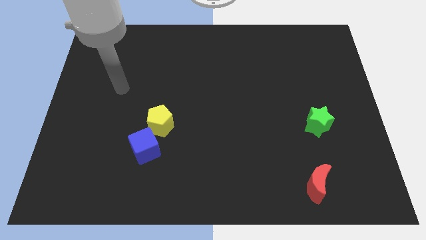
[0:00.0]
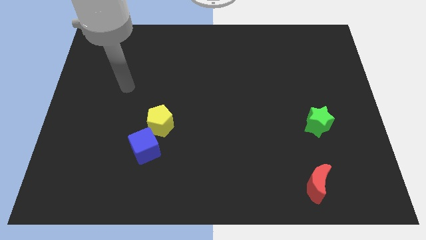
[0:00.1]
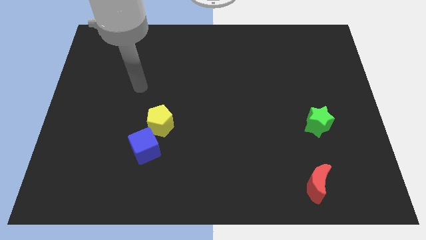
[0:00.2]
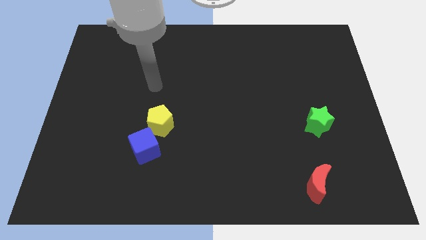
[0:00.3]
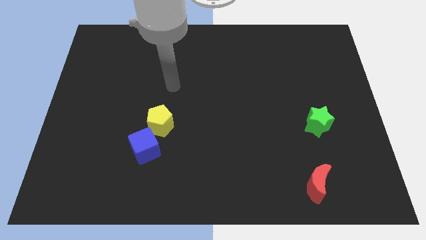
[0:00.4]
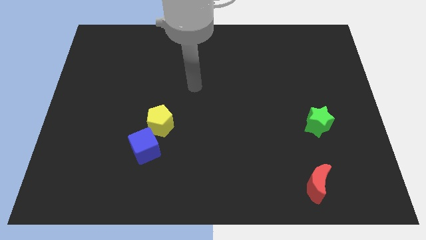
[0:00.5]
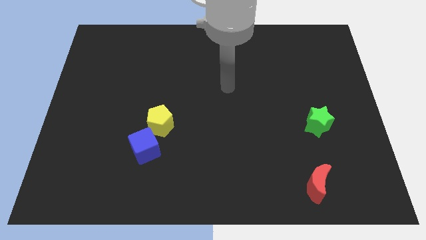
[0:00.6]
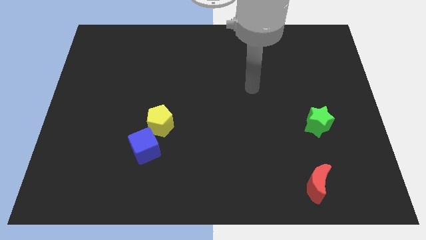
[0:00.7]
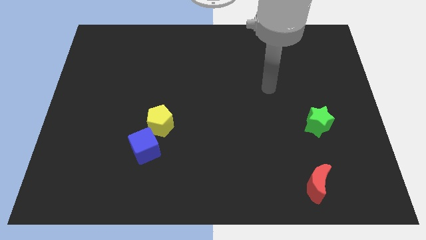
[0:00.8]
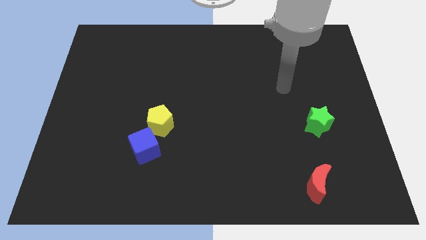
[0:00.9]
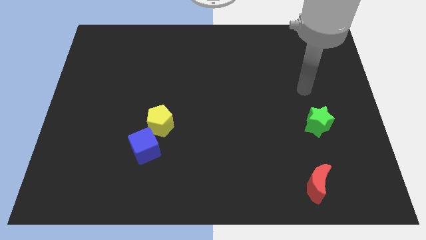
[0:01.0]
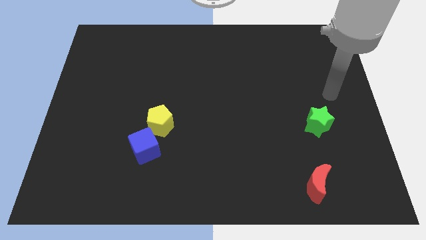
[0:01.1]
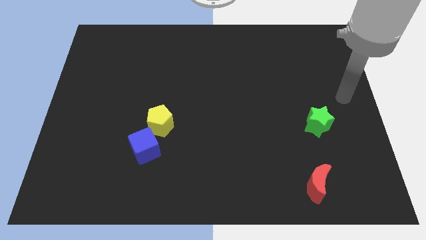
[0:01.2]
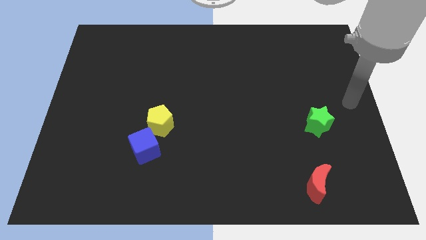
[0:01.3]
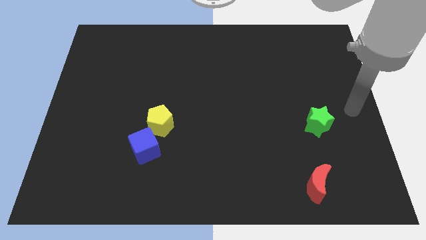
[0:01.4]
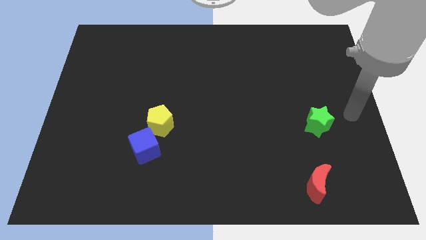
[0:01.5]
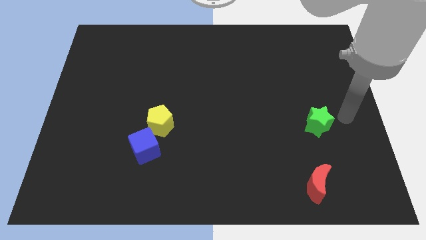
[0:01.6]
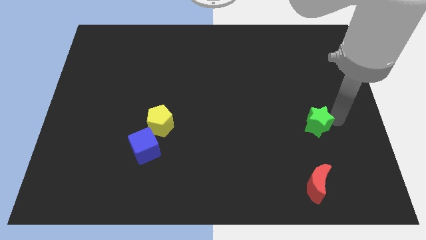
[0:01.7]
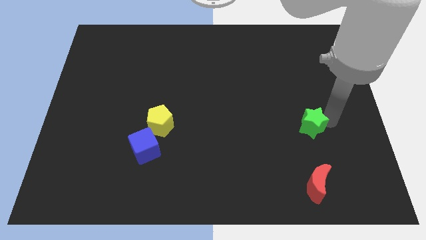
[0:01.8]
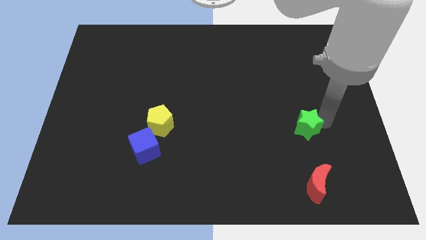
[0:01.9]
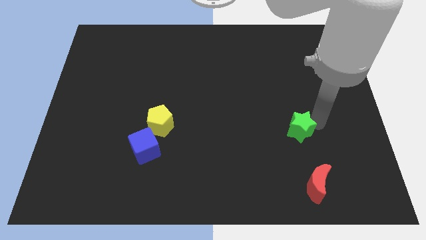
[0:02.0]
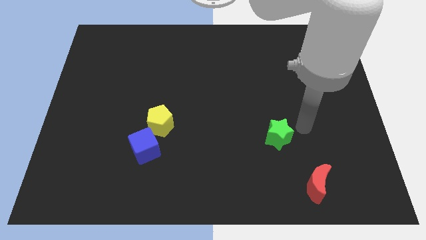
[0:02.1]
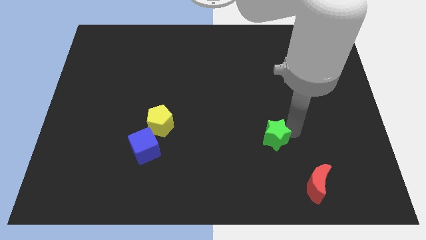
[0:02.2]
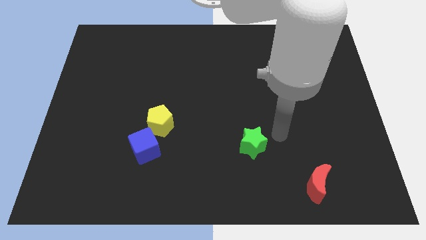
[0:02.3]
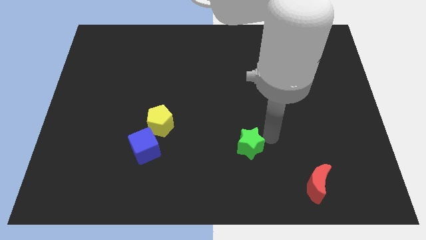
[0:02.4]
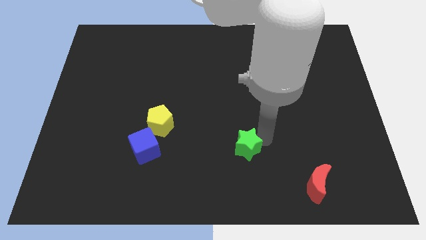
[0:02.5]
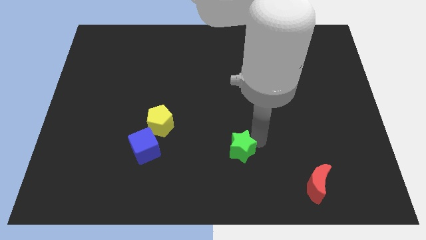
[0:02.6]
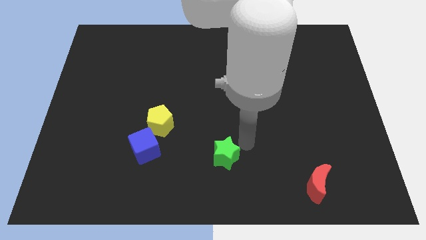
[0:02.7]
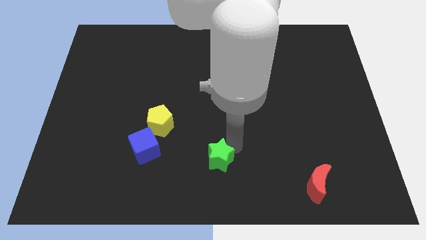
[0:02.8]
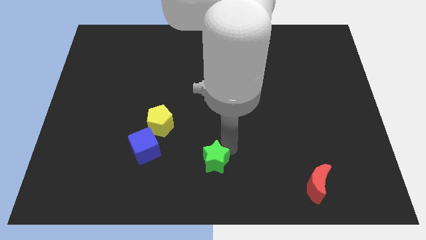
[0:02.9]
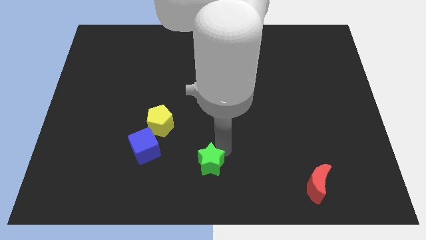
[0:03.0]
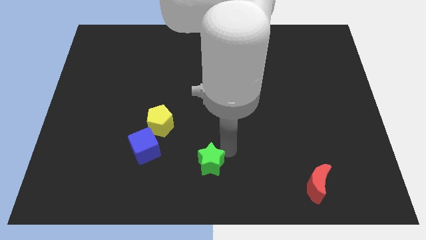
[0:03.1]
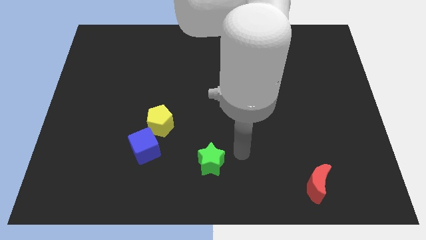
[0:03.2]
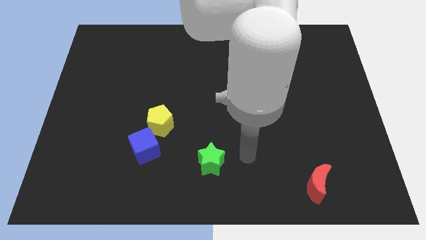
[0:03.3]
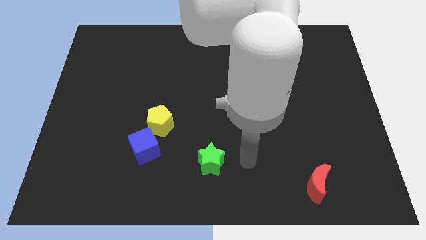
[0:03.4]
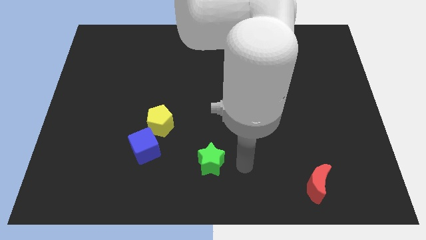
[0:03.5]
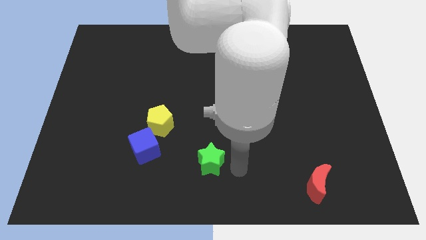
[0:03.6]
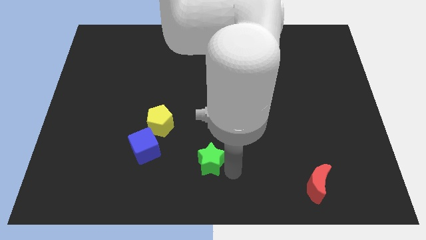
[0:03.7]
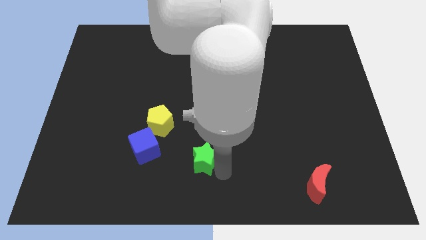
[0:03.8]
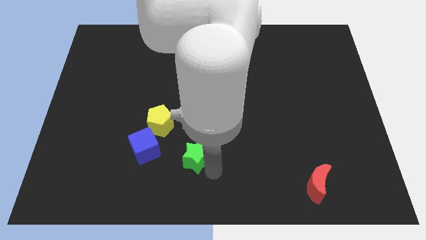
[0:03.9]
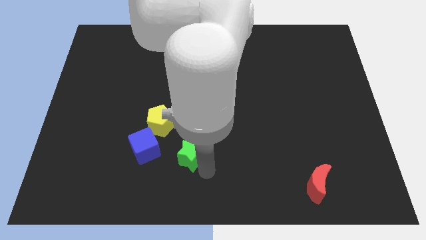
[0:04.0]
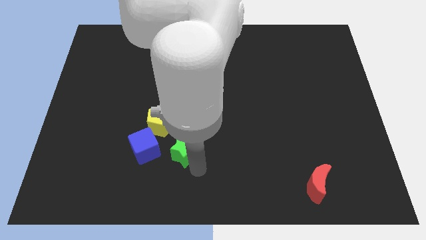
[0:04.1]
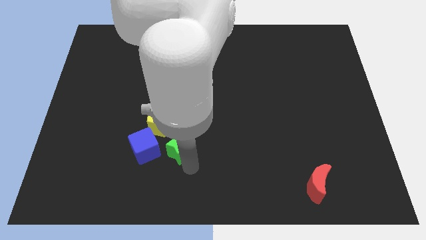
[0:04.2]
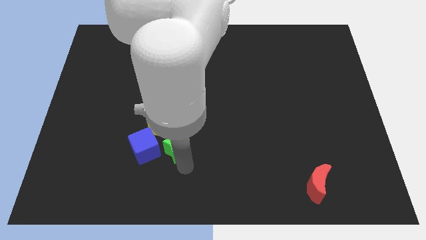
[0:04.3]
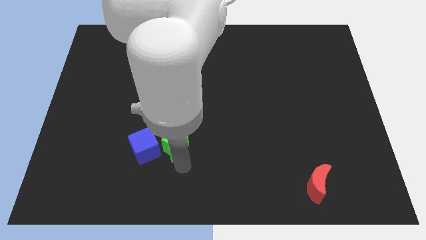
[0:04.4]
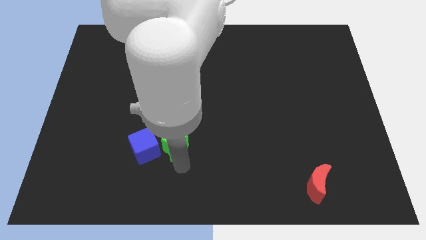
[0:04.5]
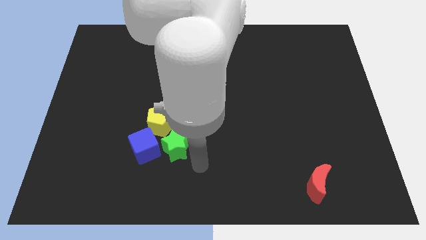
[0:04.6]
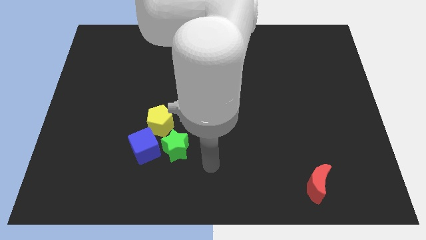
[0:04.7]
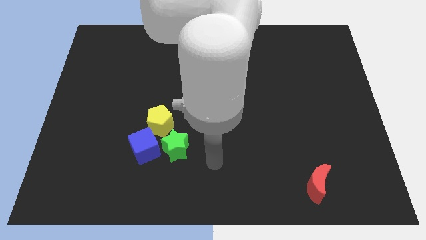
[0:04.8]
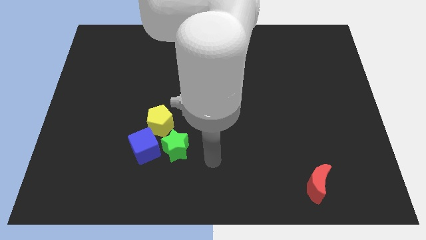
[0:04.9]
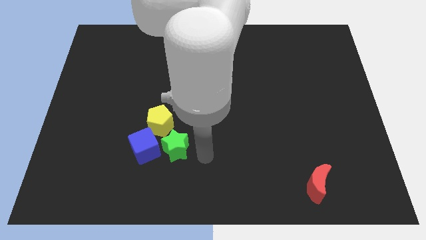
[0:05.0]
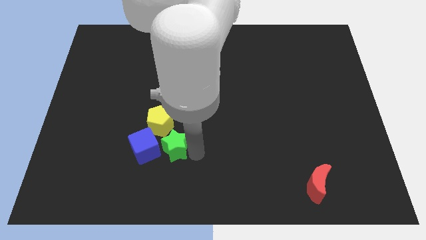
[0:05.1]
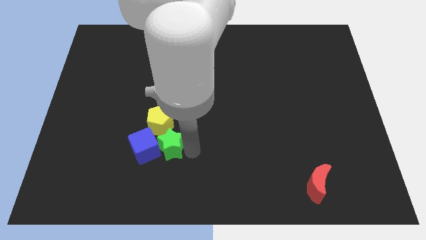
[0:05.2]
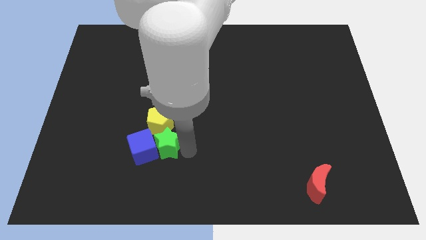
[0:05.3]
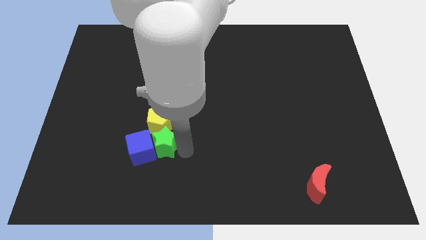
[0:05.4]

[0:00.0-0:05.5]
move the star next to the cube

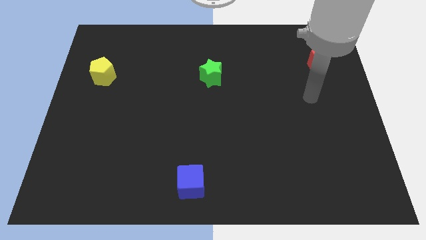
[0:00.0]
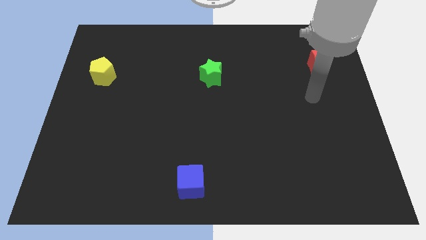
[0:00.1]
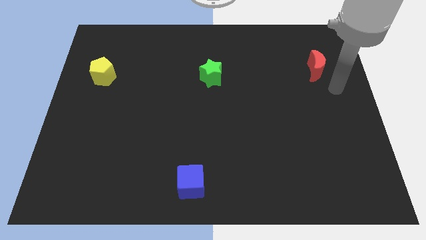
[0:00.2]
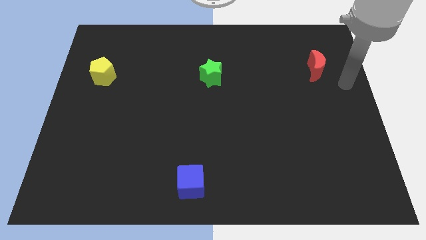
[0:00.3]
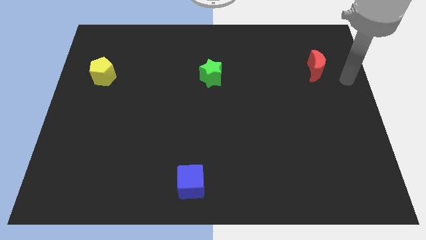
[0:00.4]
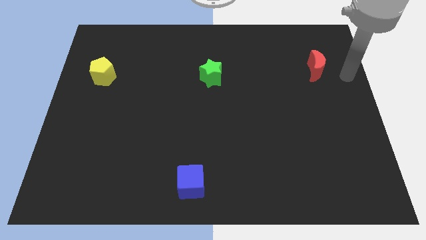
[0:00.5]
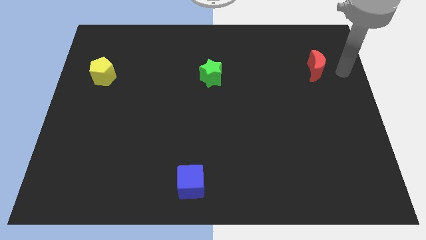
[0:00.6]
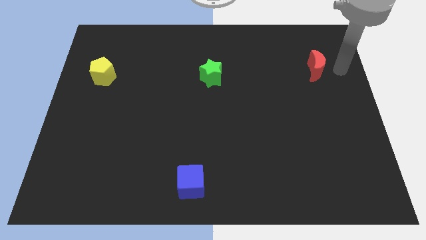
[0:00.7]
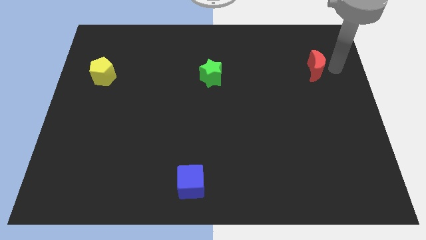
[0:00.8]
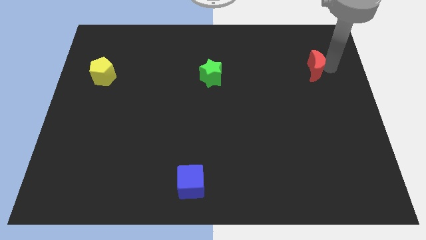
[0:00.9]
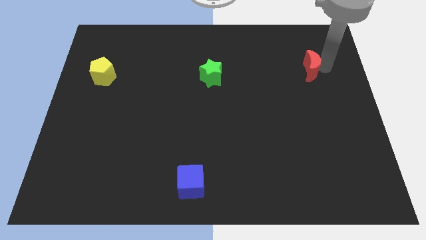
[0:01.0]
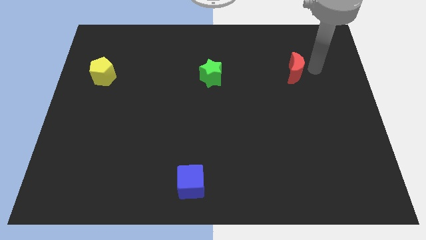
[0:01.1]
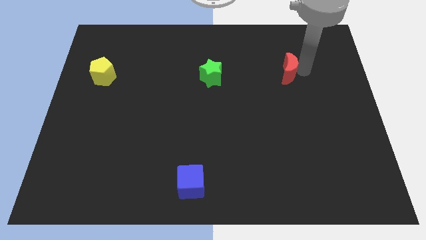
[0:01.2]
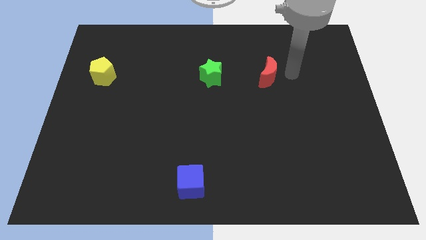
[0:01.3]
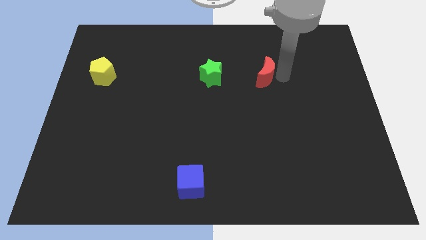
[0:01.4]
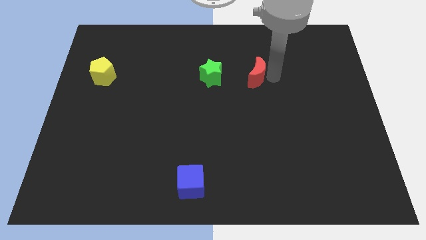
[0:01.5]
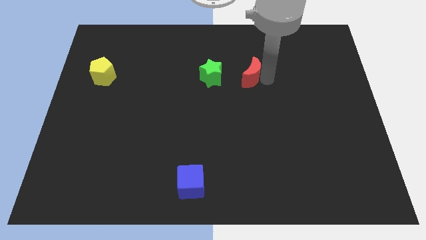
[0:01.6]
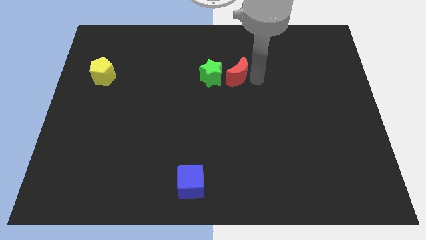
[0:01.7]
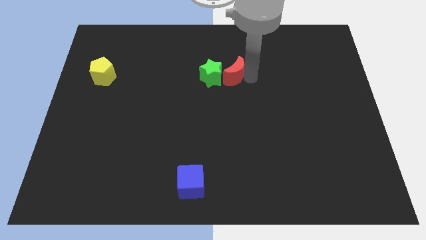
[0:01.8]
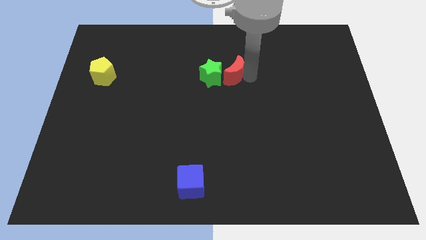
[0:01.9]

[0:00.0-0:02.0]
move the moon next to the green block

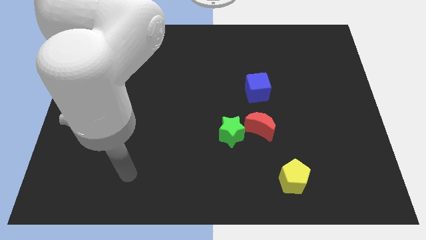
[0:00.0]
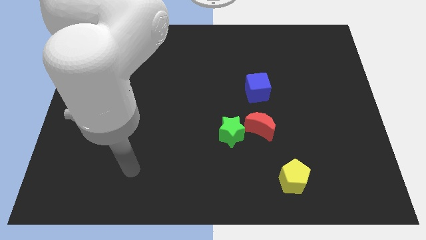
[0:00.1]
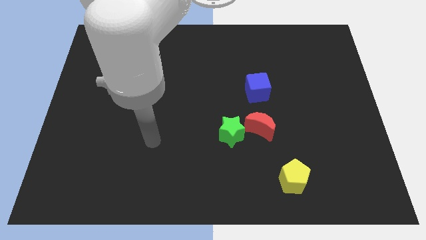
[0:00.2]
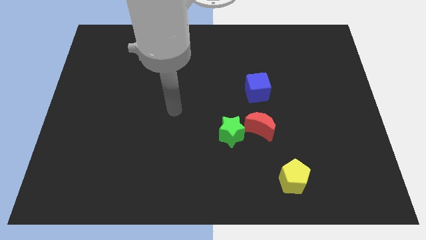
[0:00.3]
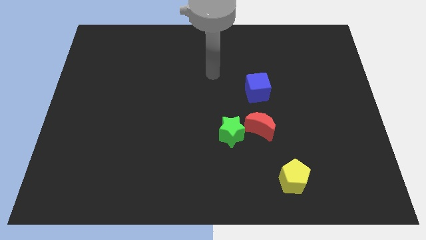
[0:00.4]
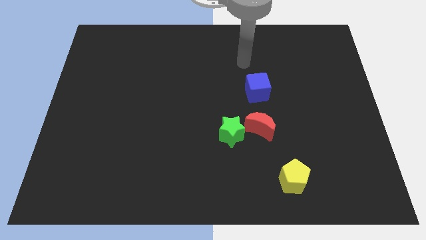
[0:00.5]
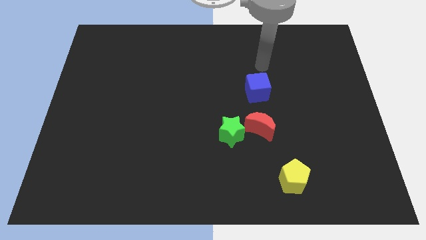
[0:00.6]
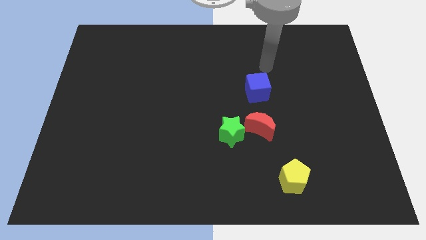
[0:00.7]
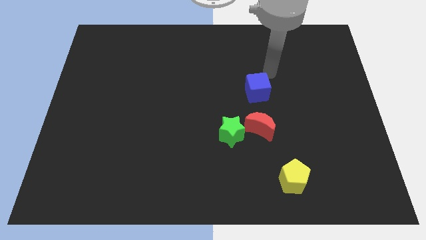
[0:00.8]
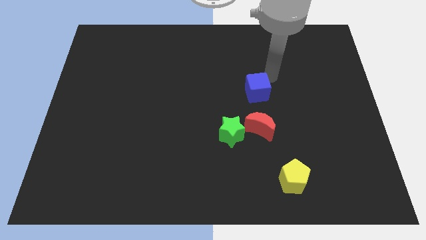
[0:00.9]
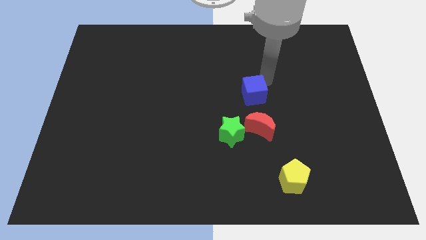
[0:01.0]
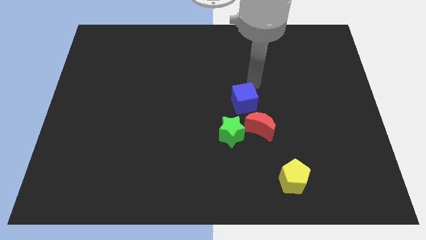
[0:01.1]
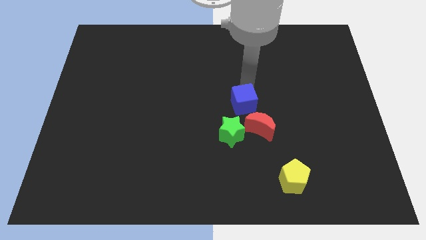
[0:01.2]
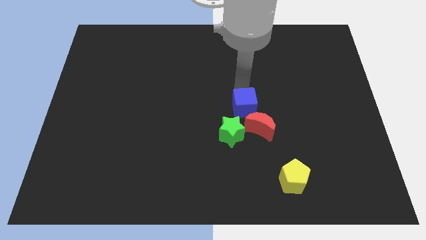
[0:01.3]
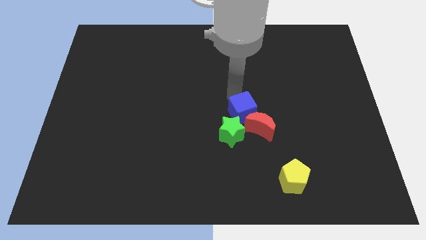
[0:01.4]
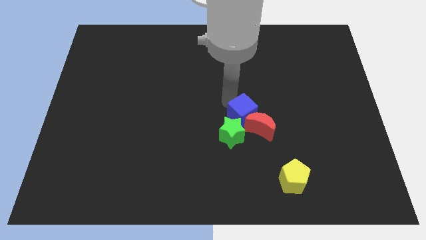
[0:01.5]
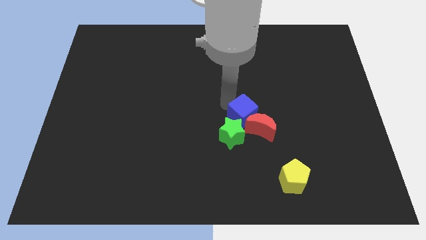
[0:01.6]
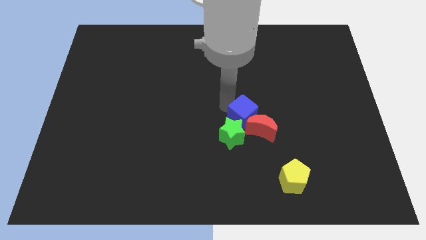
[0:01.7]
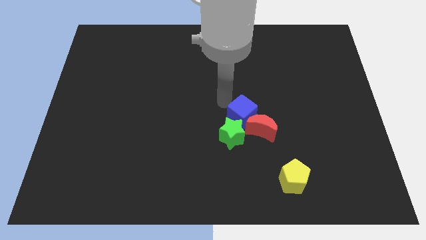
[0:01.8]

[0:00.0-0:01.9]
move the cube close to the green block
